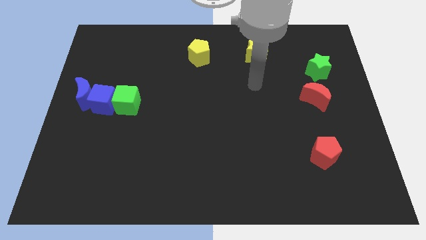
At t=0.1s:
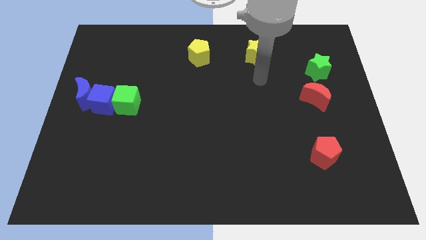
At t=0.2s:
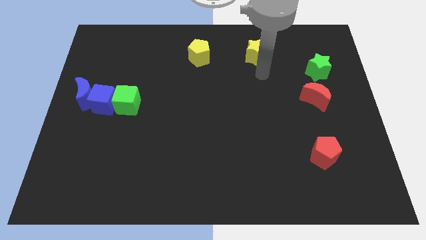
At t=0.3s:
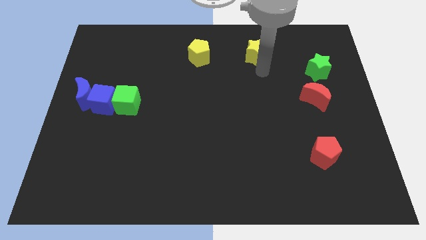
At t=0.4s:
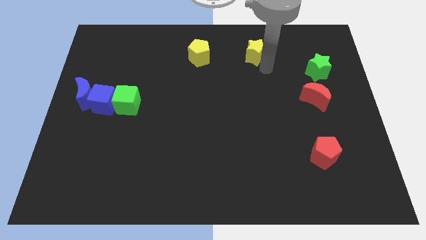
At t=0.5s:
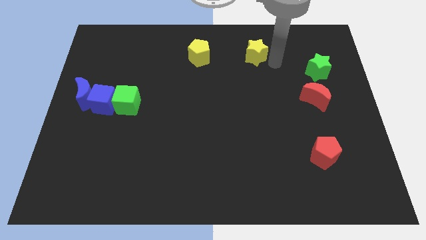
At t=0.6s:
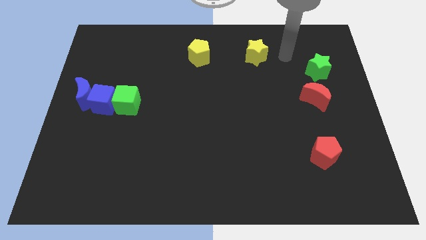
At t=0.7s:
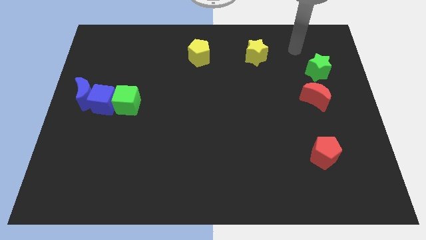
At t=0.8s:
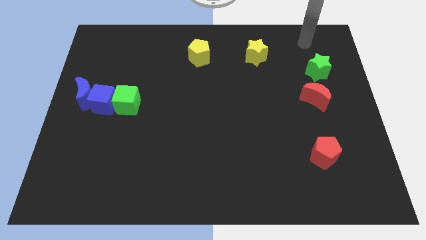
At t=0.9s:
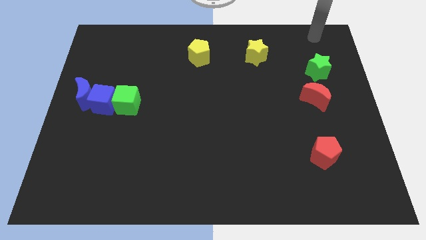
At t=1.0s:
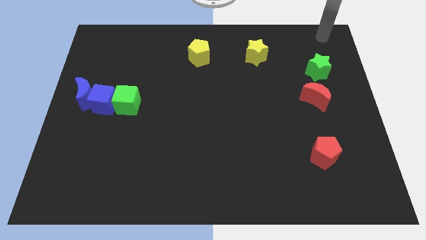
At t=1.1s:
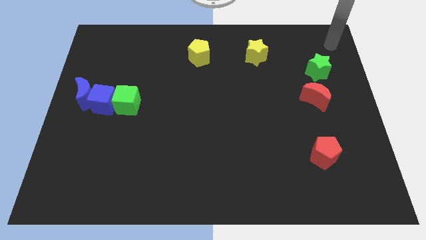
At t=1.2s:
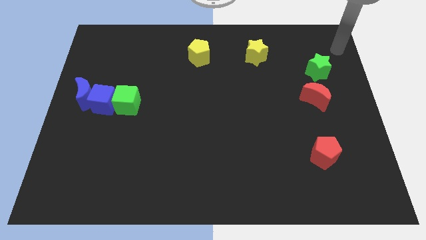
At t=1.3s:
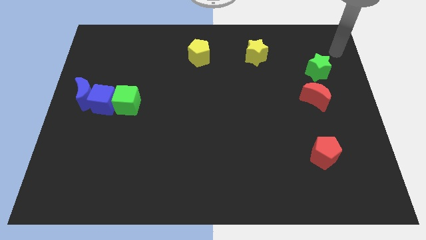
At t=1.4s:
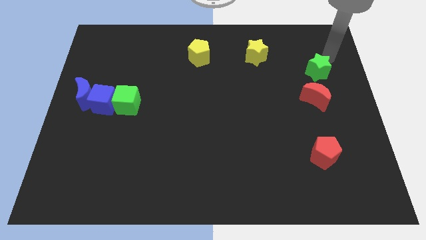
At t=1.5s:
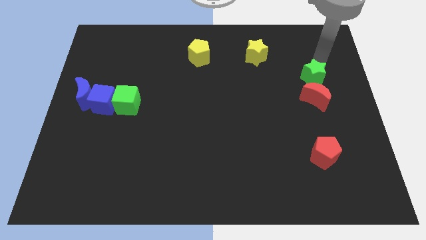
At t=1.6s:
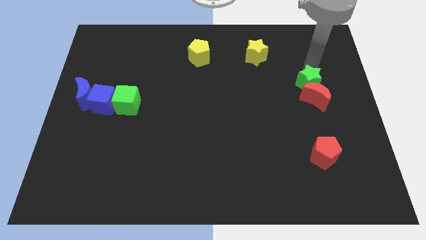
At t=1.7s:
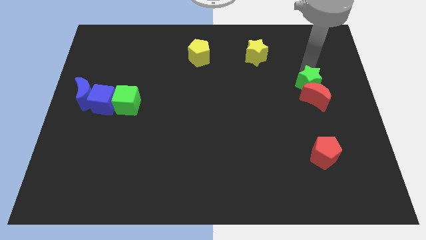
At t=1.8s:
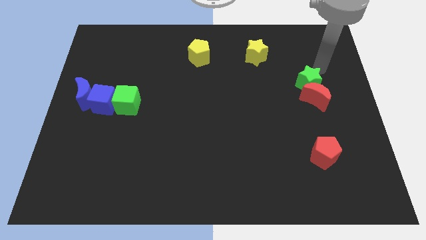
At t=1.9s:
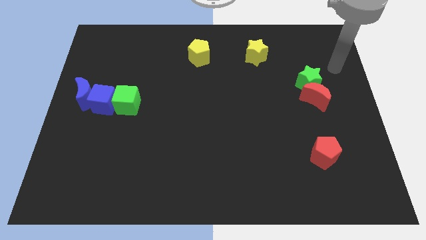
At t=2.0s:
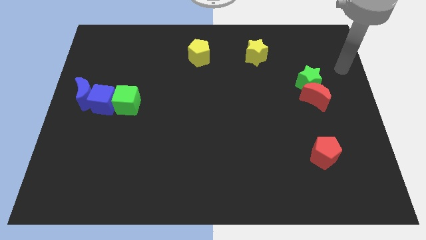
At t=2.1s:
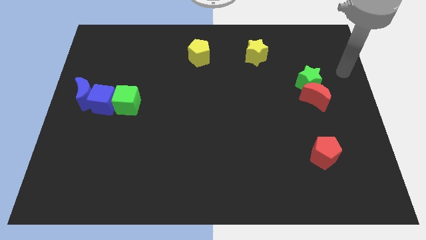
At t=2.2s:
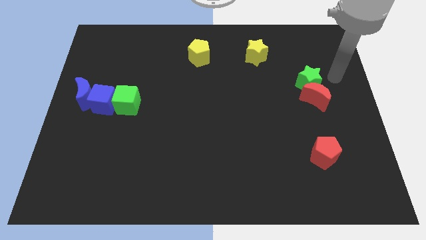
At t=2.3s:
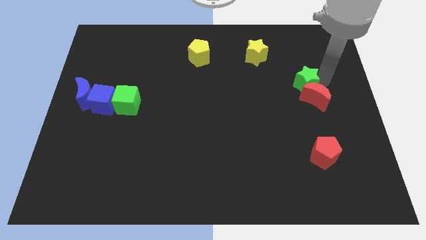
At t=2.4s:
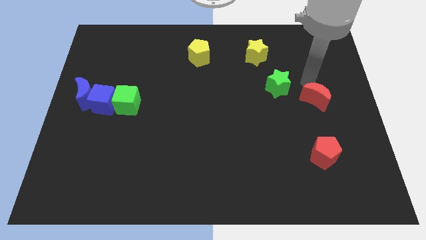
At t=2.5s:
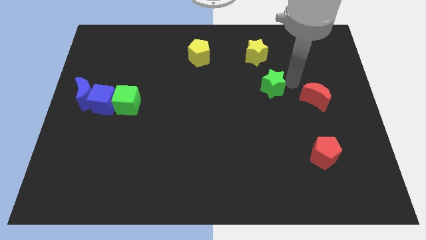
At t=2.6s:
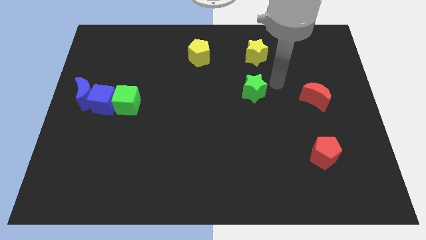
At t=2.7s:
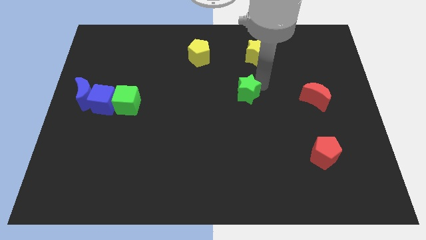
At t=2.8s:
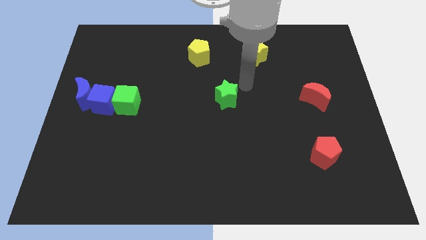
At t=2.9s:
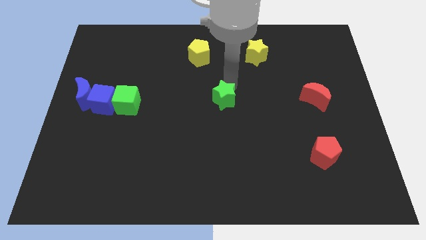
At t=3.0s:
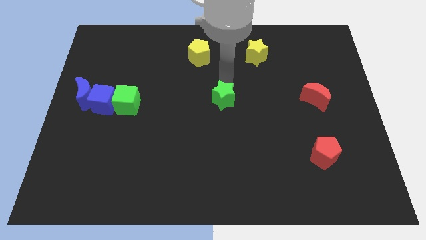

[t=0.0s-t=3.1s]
place the green star to the center of the board

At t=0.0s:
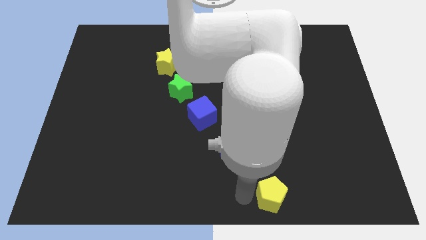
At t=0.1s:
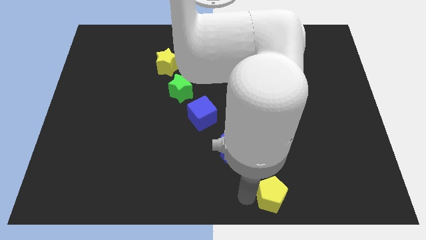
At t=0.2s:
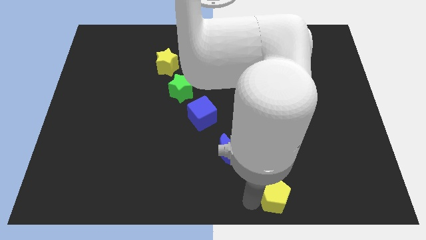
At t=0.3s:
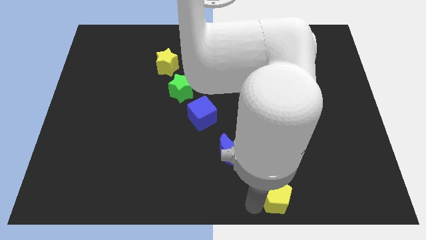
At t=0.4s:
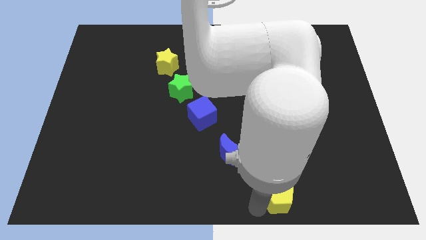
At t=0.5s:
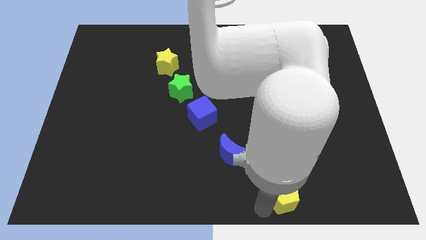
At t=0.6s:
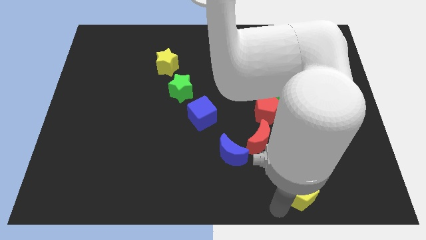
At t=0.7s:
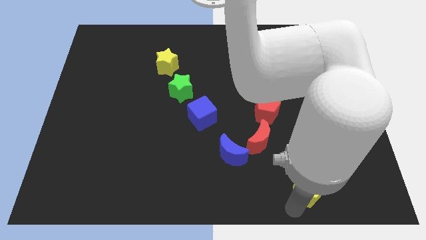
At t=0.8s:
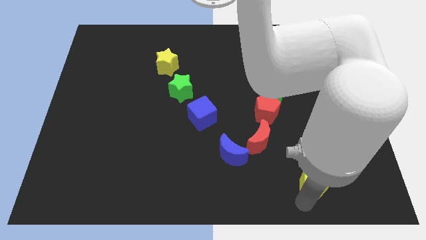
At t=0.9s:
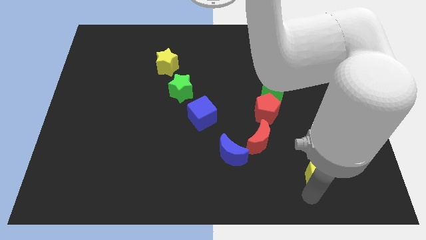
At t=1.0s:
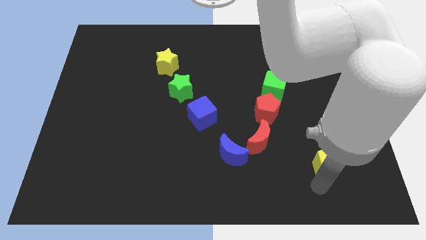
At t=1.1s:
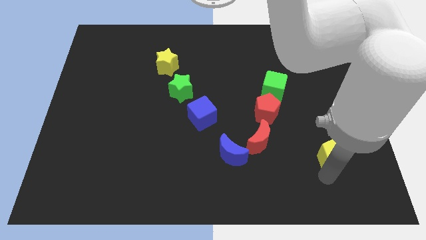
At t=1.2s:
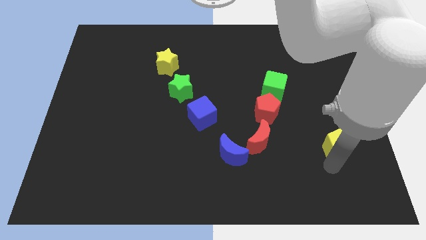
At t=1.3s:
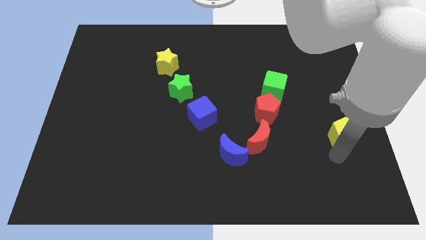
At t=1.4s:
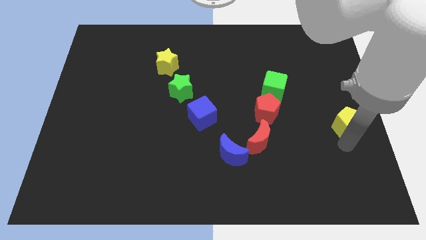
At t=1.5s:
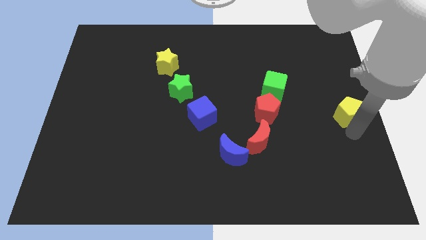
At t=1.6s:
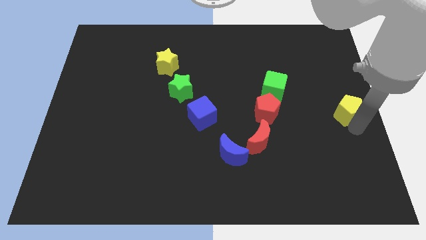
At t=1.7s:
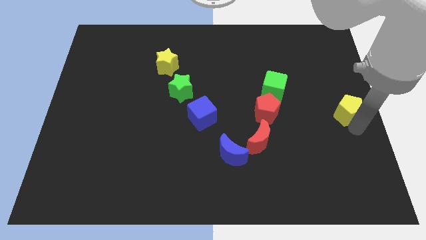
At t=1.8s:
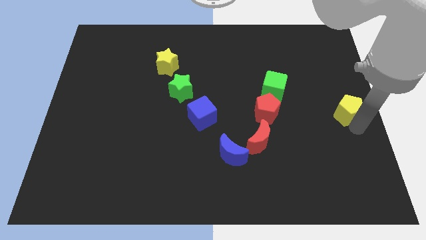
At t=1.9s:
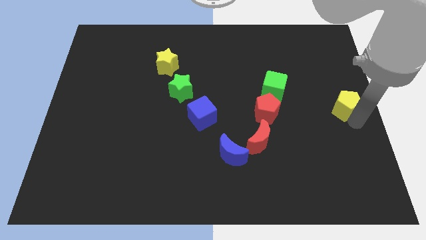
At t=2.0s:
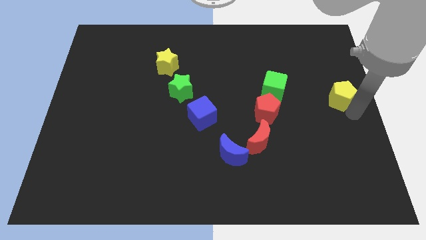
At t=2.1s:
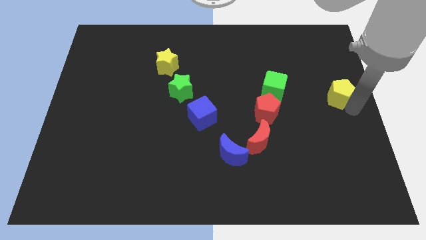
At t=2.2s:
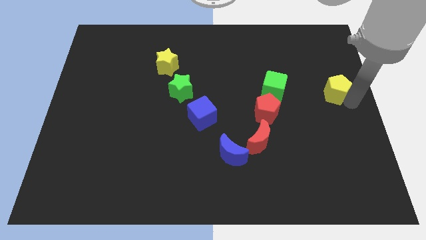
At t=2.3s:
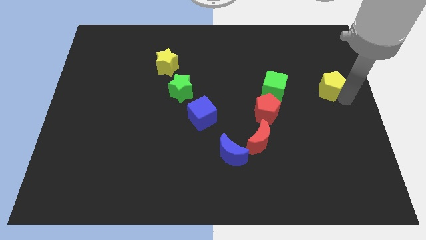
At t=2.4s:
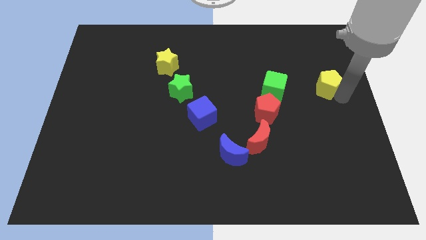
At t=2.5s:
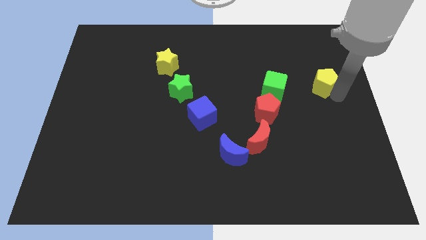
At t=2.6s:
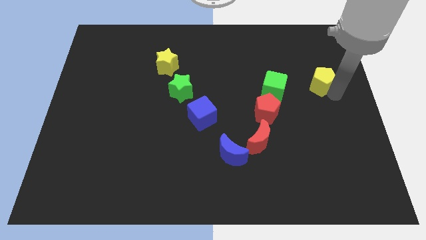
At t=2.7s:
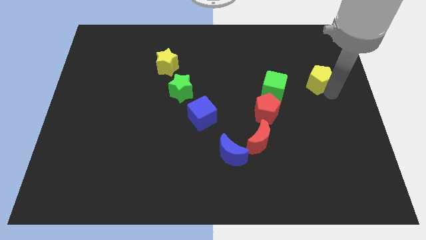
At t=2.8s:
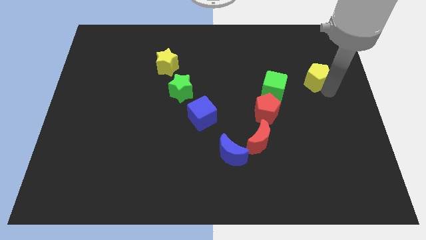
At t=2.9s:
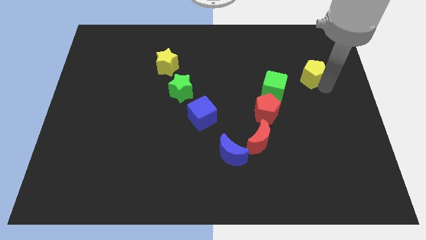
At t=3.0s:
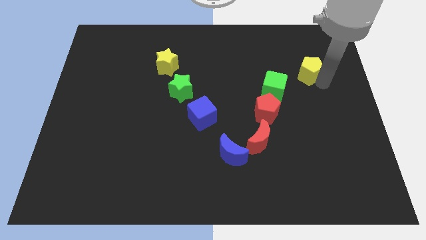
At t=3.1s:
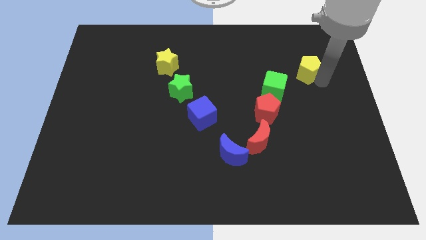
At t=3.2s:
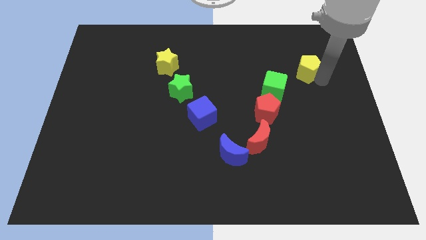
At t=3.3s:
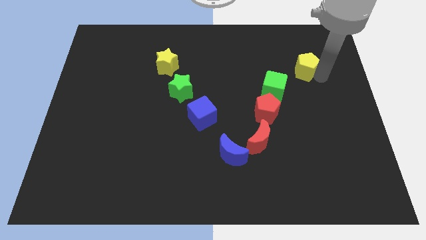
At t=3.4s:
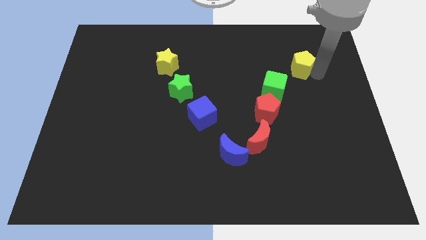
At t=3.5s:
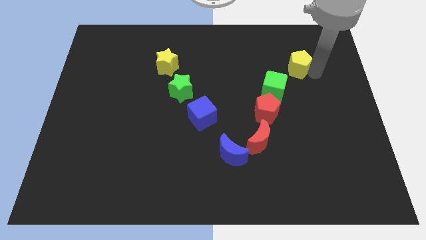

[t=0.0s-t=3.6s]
place the yellow pentagon diagonally top right to the green cube

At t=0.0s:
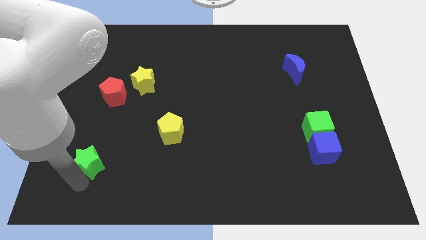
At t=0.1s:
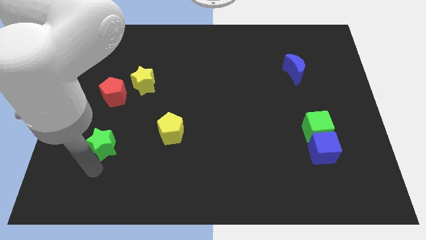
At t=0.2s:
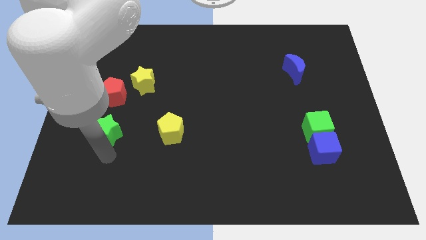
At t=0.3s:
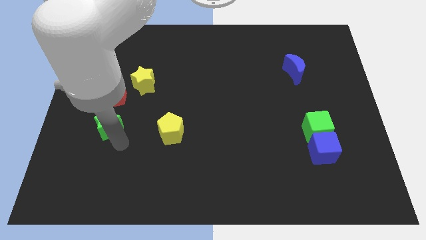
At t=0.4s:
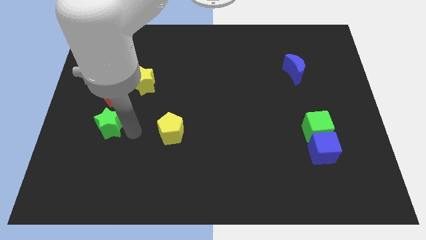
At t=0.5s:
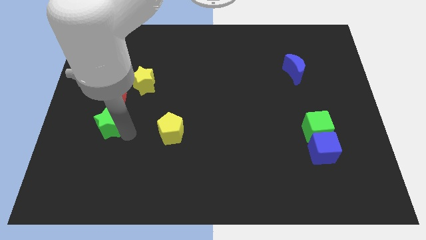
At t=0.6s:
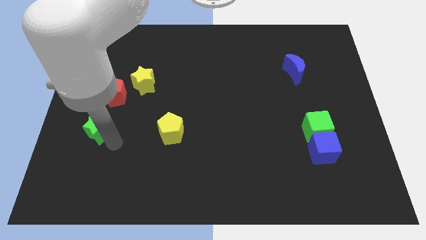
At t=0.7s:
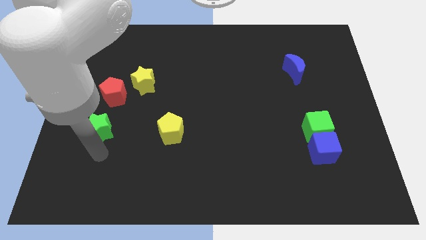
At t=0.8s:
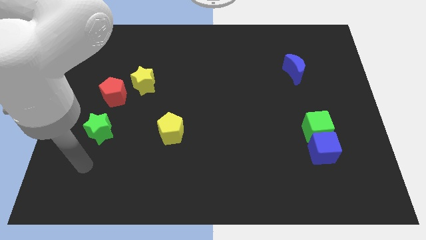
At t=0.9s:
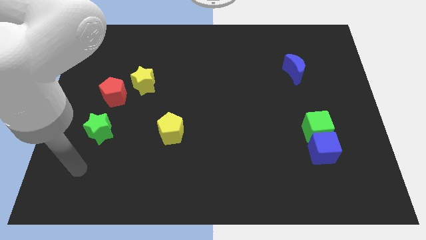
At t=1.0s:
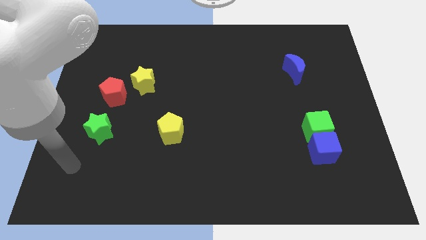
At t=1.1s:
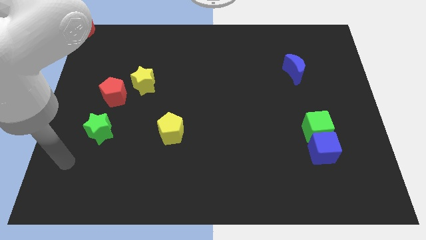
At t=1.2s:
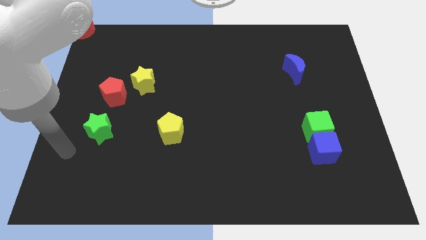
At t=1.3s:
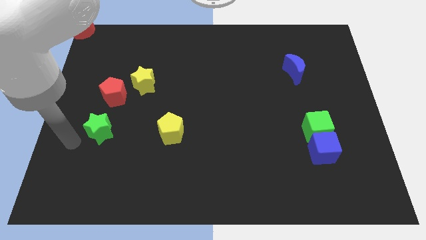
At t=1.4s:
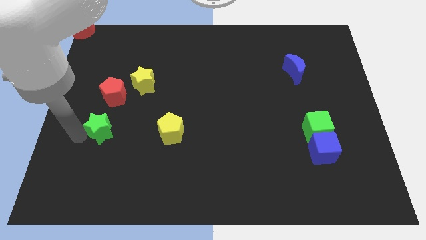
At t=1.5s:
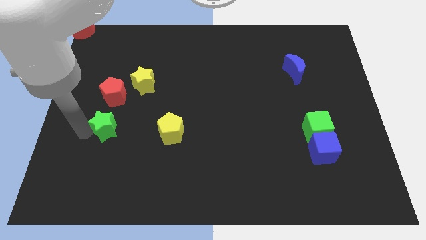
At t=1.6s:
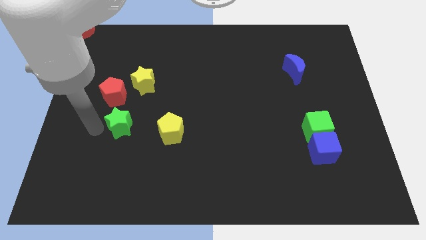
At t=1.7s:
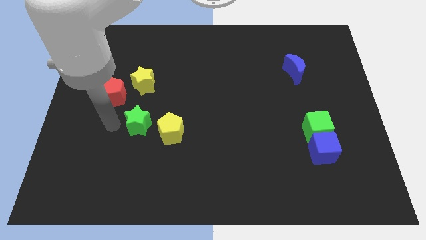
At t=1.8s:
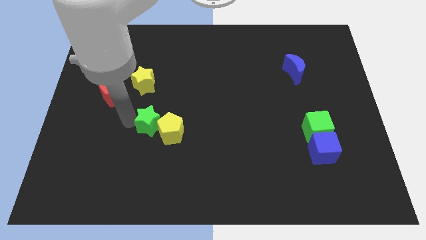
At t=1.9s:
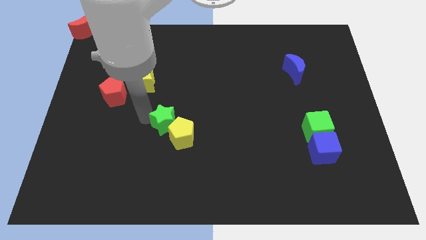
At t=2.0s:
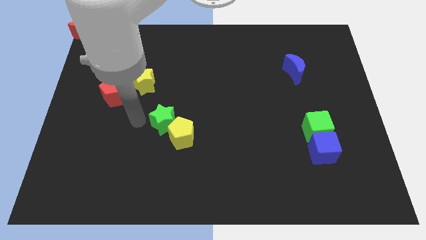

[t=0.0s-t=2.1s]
push the green star into the yellow pentagon
